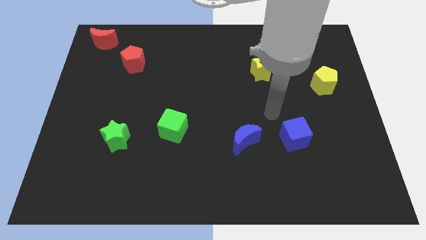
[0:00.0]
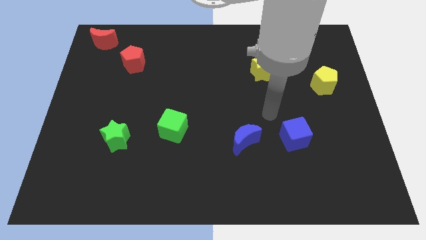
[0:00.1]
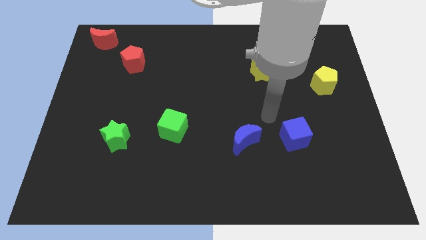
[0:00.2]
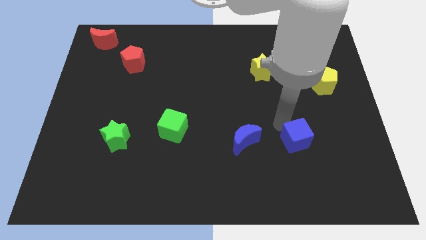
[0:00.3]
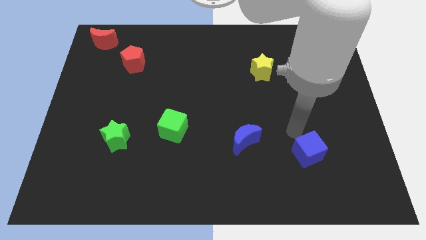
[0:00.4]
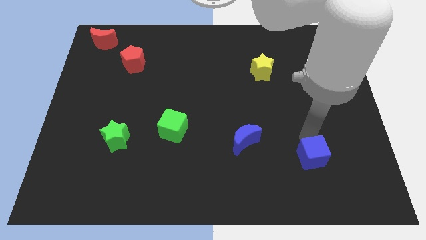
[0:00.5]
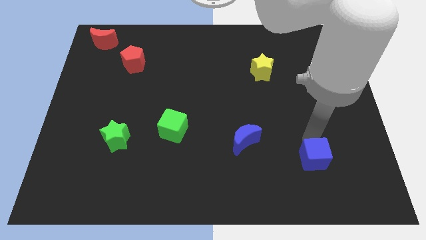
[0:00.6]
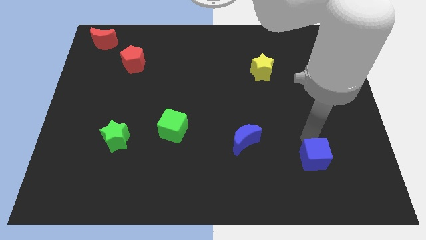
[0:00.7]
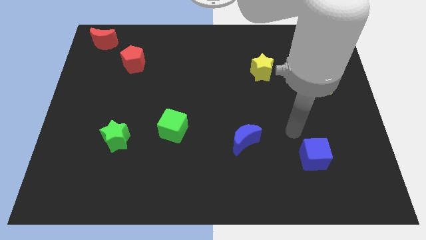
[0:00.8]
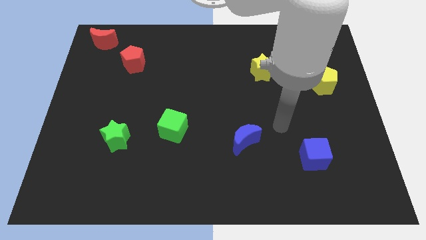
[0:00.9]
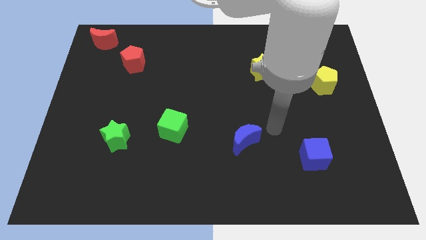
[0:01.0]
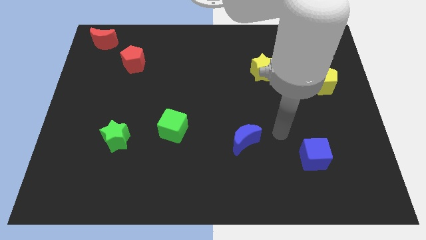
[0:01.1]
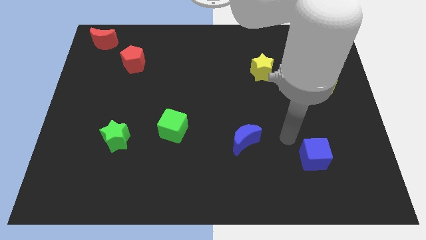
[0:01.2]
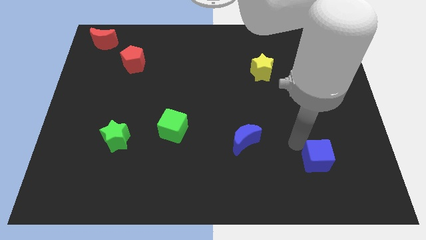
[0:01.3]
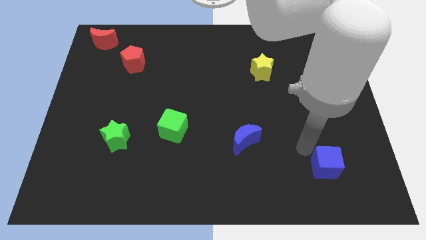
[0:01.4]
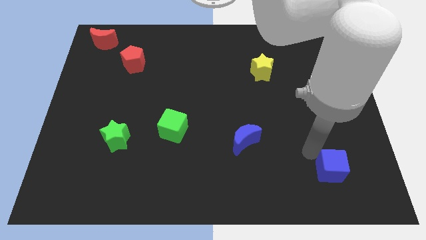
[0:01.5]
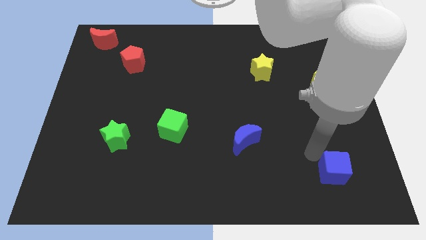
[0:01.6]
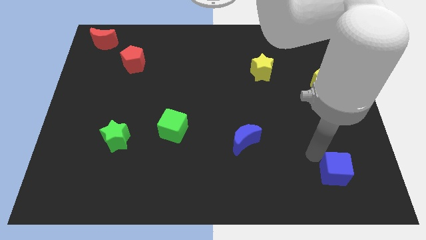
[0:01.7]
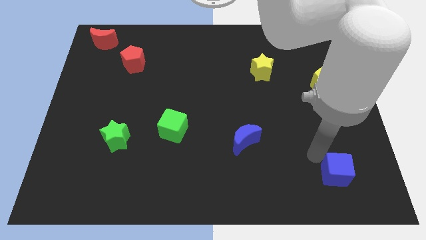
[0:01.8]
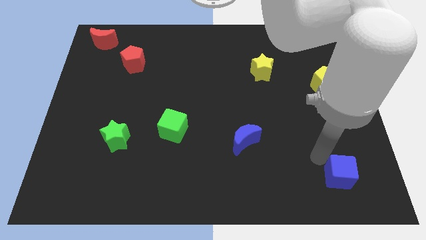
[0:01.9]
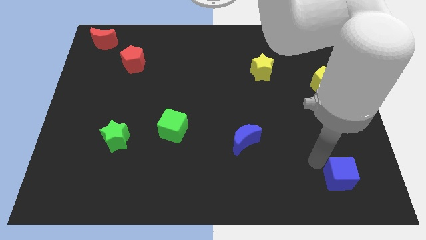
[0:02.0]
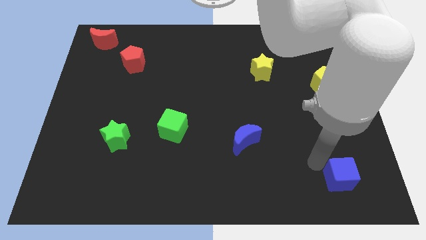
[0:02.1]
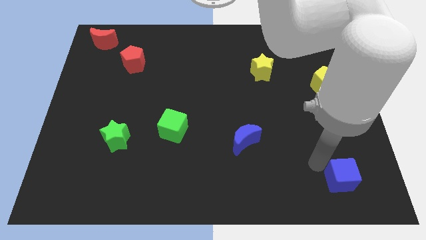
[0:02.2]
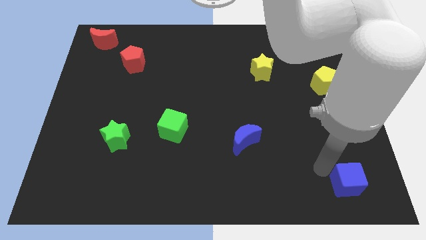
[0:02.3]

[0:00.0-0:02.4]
drag the blue cube towards bottom side

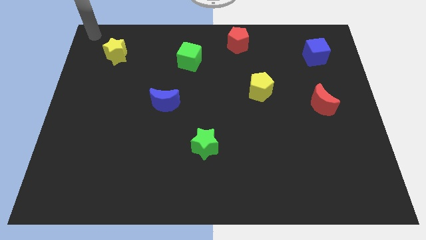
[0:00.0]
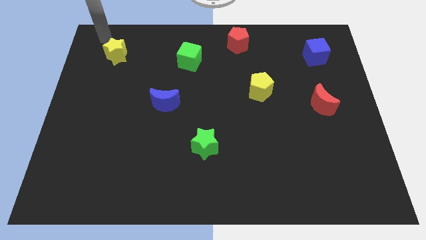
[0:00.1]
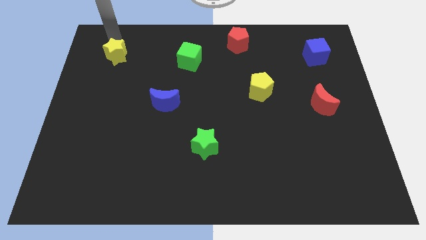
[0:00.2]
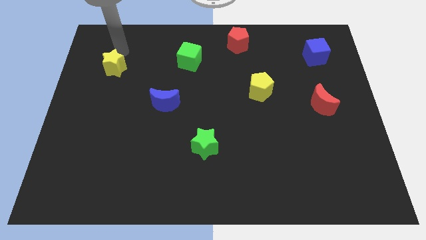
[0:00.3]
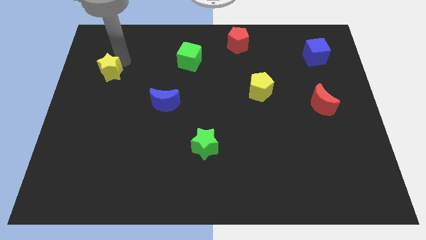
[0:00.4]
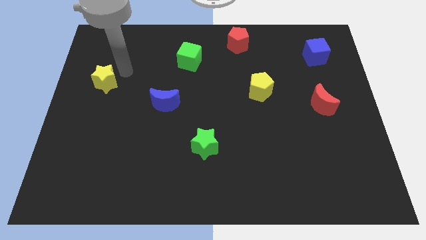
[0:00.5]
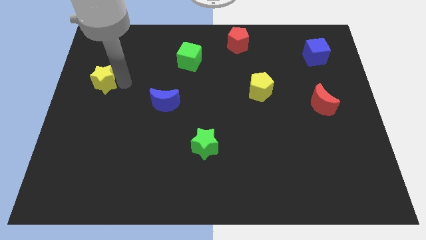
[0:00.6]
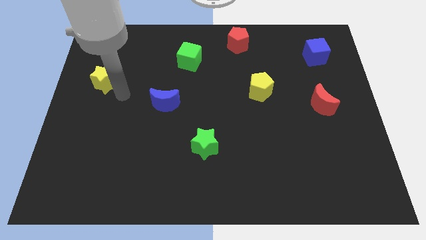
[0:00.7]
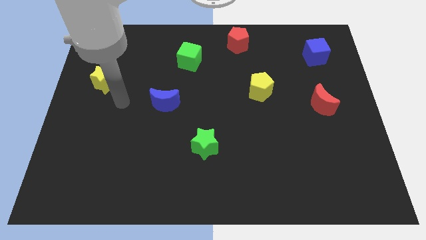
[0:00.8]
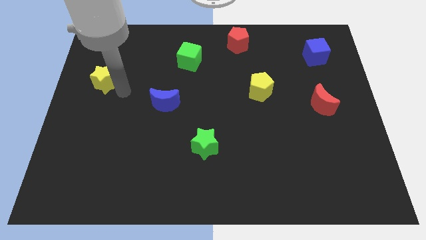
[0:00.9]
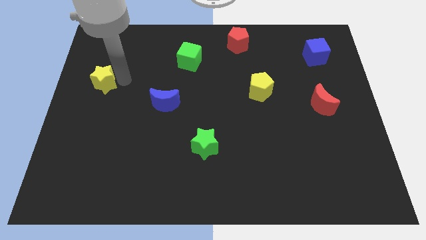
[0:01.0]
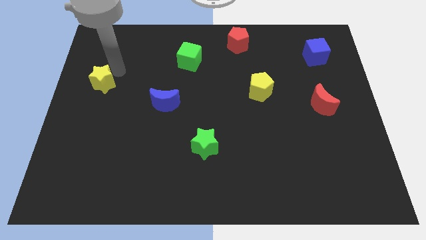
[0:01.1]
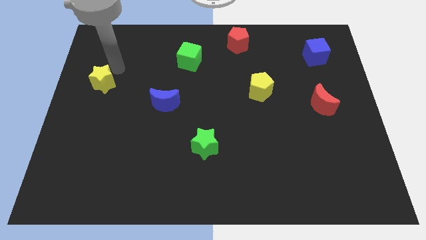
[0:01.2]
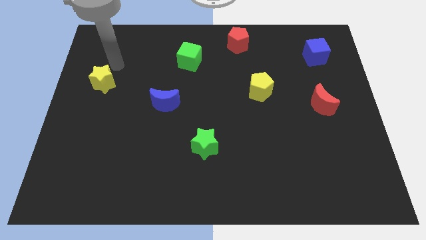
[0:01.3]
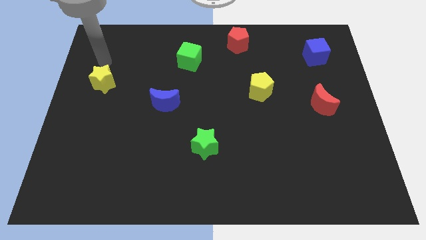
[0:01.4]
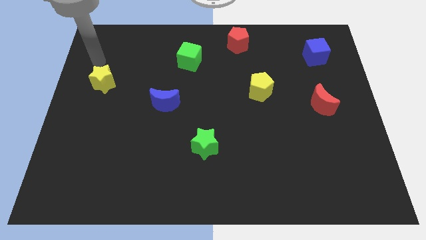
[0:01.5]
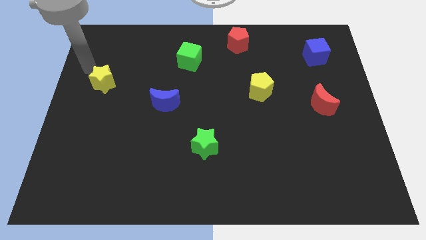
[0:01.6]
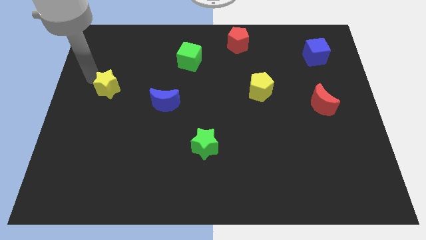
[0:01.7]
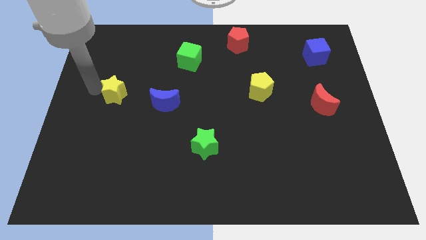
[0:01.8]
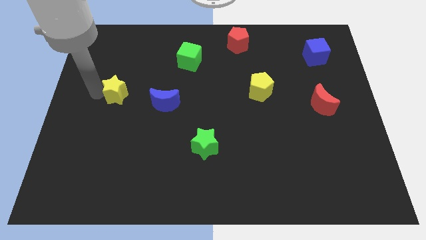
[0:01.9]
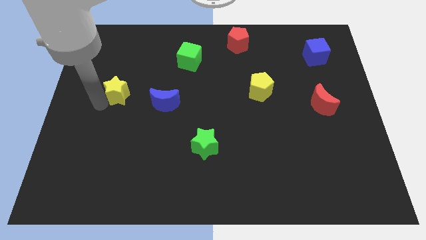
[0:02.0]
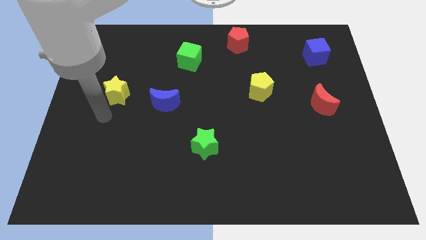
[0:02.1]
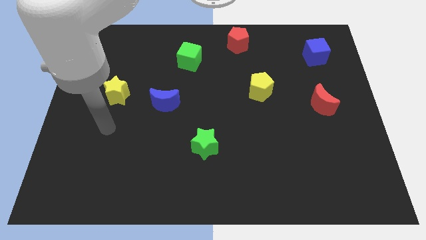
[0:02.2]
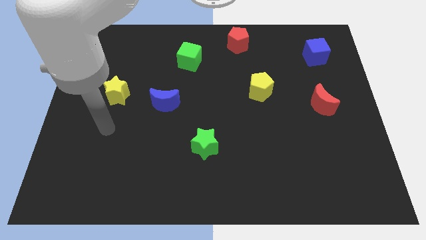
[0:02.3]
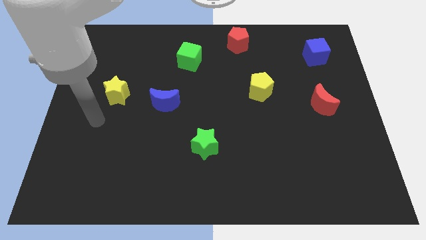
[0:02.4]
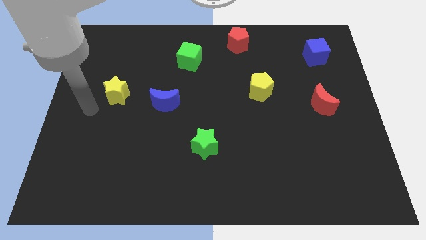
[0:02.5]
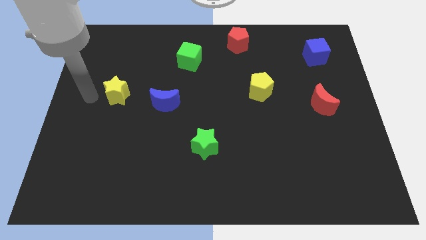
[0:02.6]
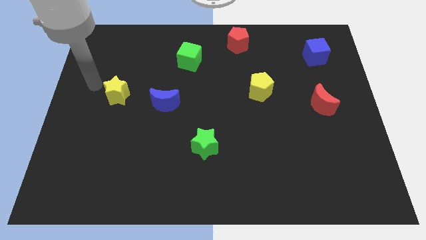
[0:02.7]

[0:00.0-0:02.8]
push the yellow star parallel to the yellow pentagon

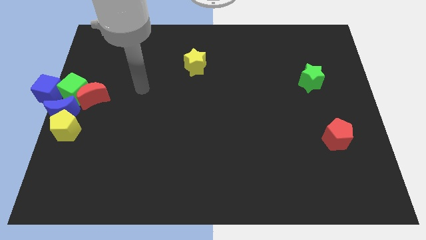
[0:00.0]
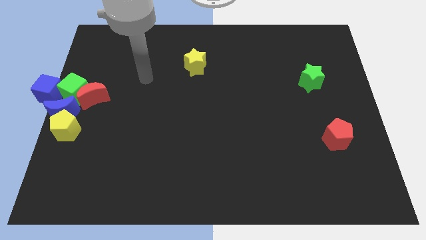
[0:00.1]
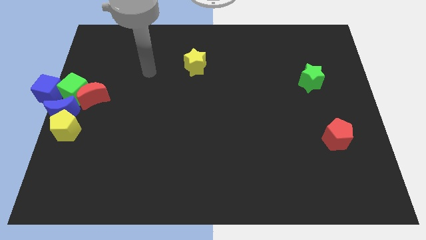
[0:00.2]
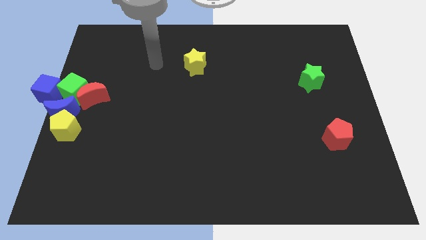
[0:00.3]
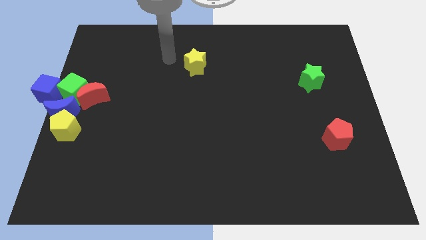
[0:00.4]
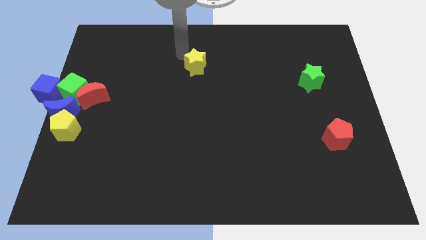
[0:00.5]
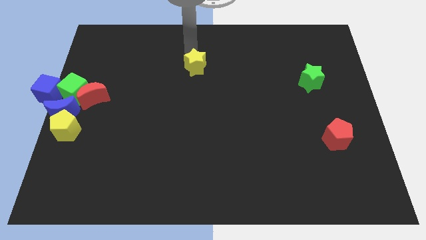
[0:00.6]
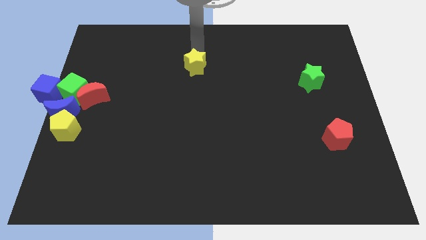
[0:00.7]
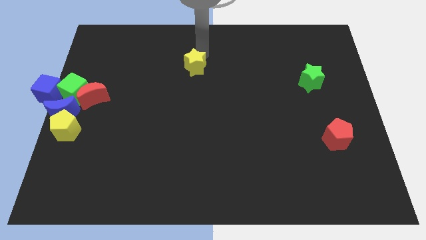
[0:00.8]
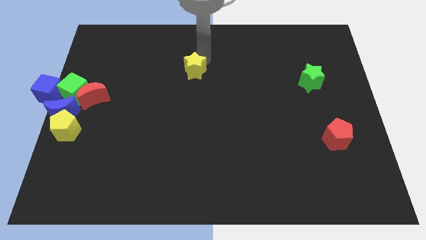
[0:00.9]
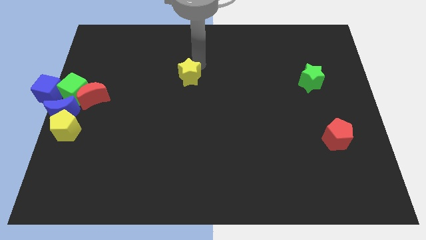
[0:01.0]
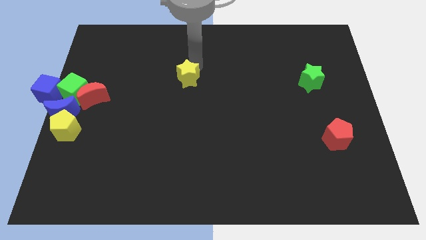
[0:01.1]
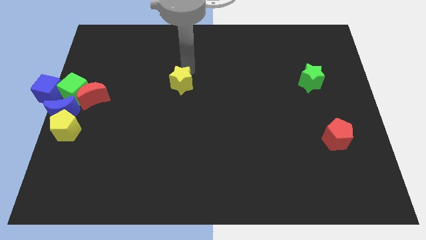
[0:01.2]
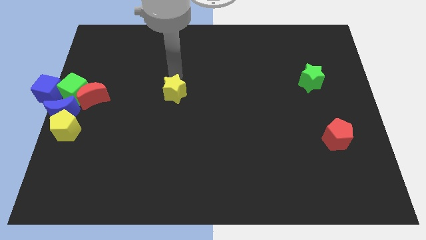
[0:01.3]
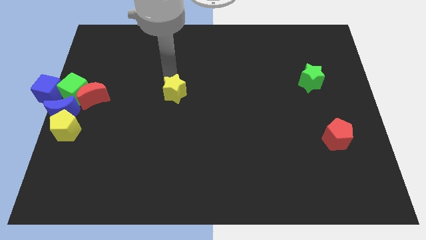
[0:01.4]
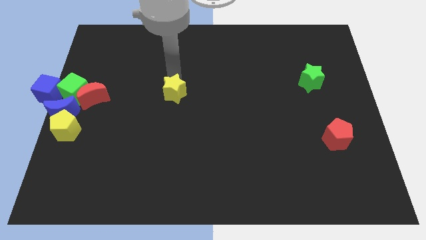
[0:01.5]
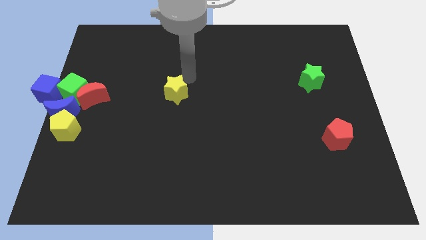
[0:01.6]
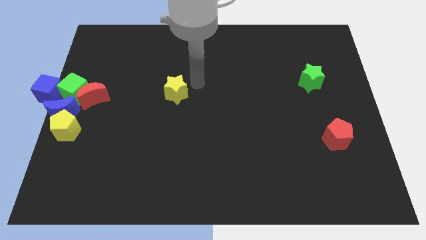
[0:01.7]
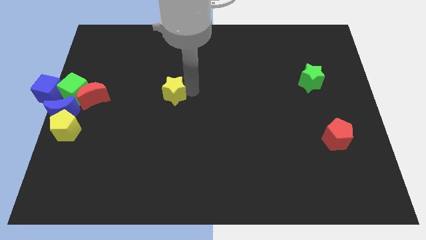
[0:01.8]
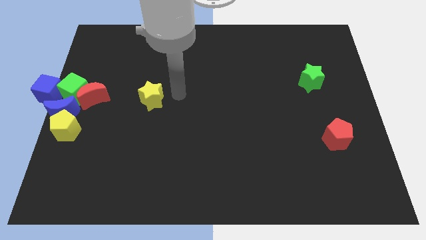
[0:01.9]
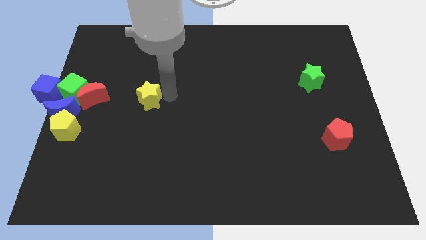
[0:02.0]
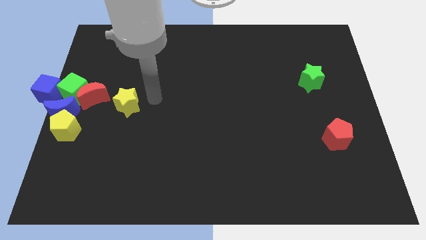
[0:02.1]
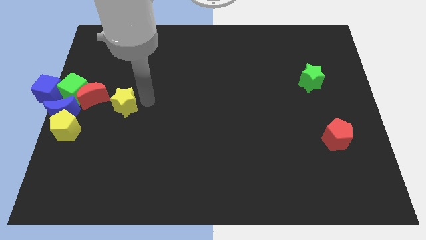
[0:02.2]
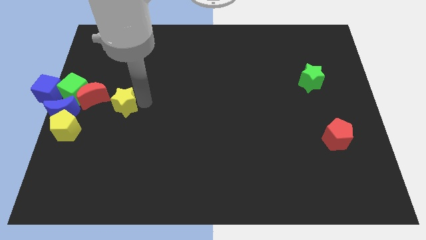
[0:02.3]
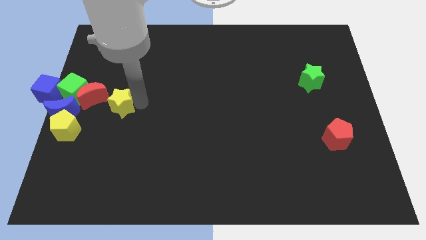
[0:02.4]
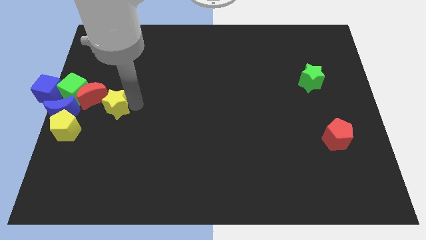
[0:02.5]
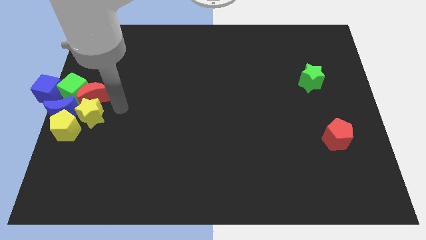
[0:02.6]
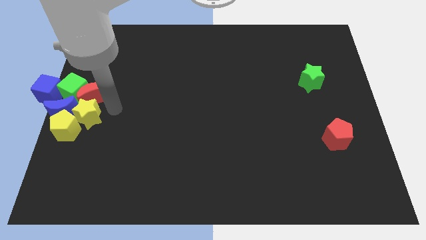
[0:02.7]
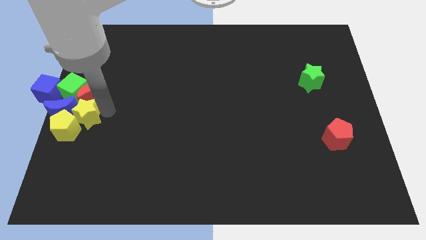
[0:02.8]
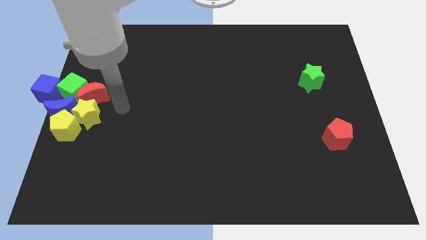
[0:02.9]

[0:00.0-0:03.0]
push the yellow star to the group of blocks at the left center of the board

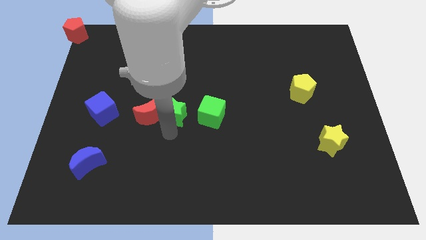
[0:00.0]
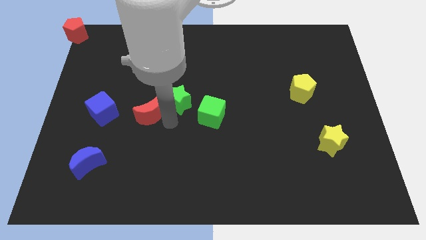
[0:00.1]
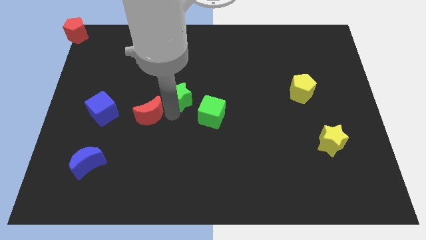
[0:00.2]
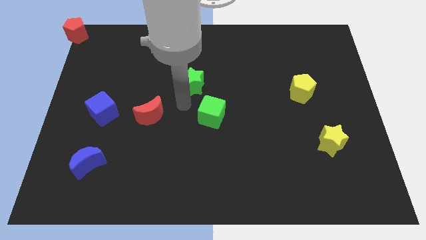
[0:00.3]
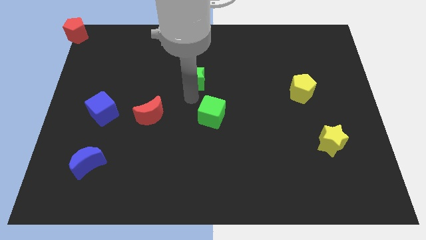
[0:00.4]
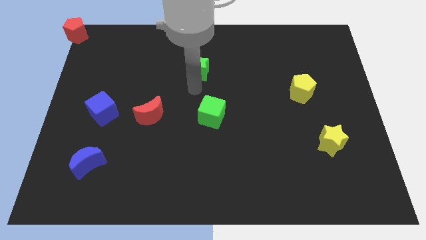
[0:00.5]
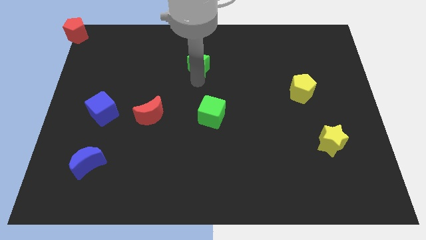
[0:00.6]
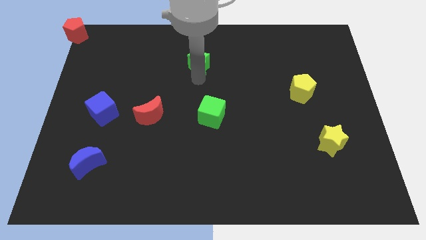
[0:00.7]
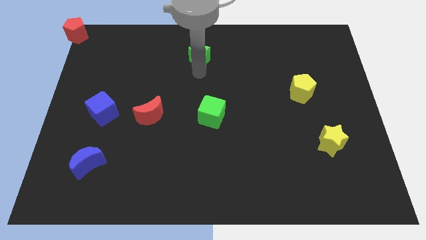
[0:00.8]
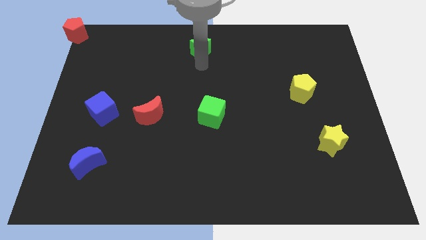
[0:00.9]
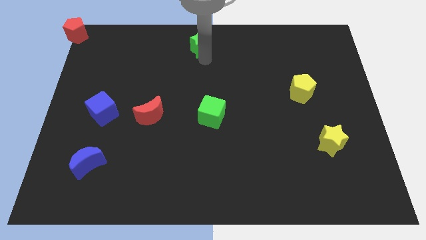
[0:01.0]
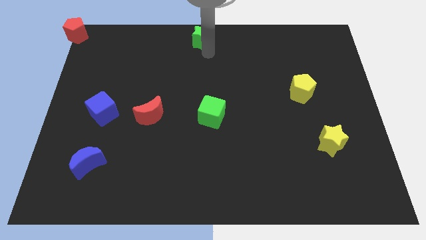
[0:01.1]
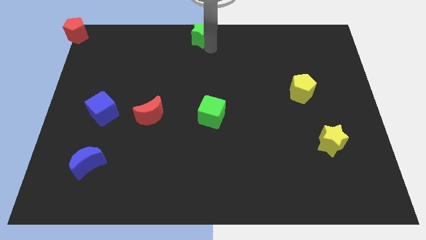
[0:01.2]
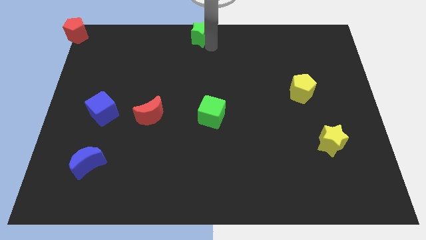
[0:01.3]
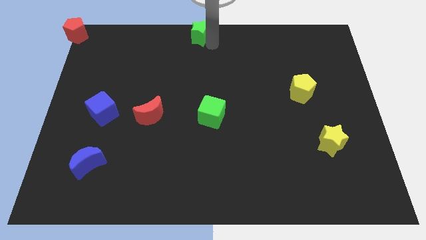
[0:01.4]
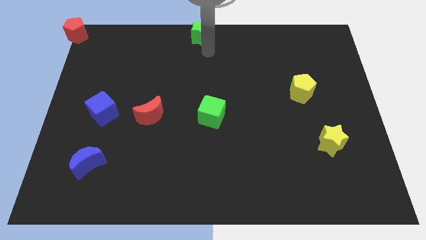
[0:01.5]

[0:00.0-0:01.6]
move the green star to the top center of the board
